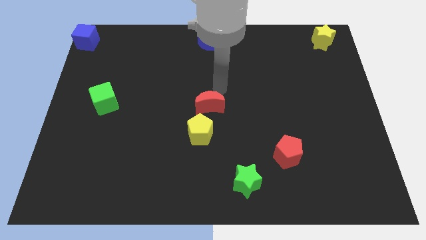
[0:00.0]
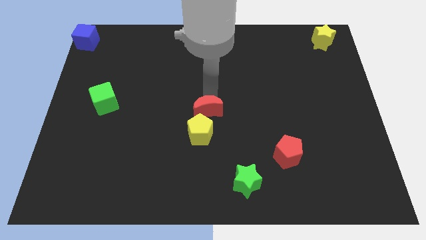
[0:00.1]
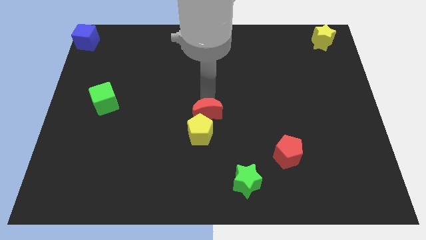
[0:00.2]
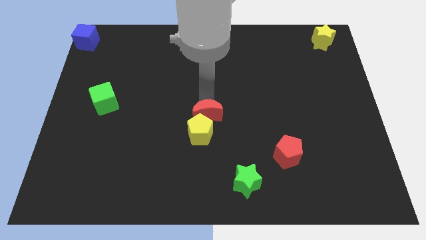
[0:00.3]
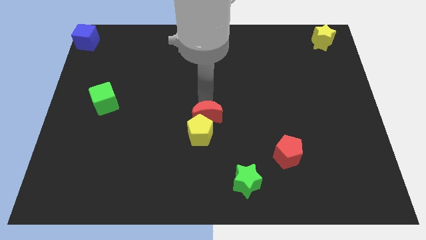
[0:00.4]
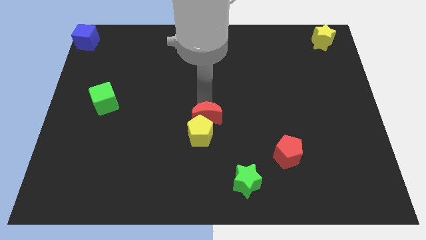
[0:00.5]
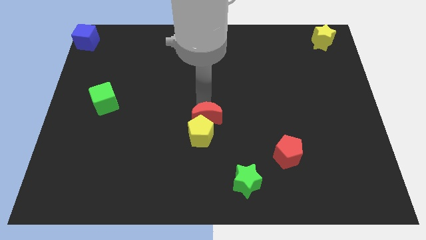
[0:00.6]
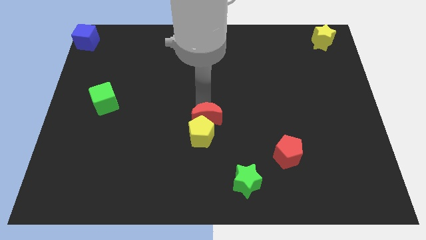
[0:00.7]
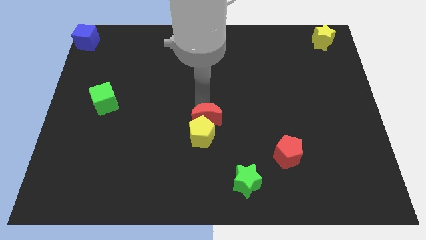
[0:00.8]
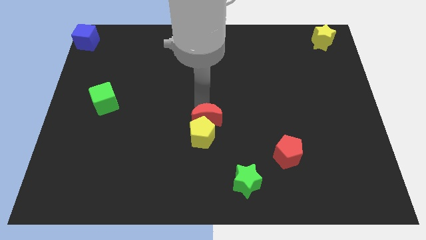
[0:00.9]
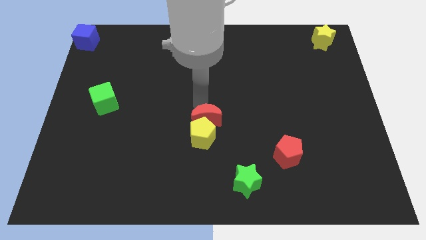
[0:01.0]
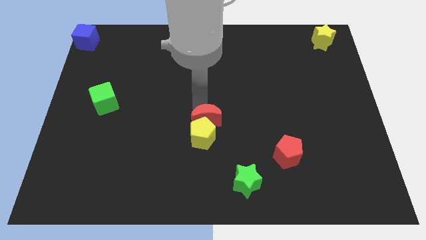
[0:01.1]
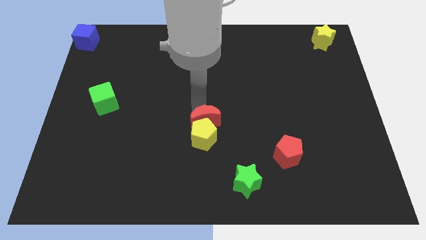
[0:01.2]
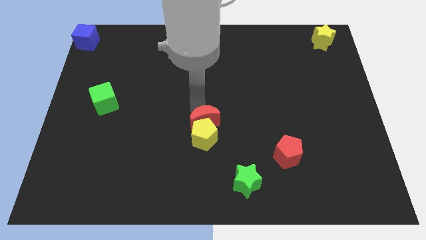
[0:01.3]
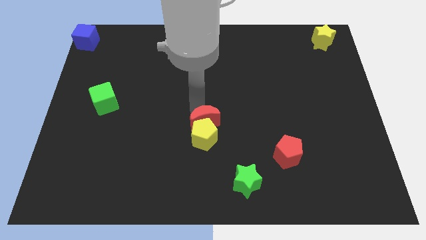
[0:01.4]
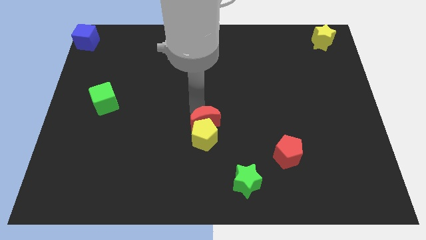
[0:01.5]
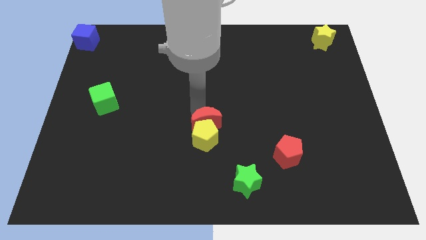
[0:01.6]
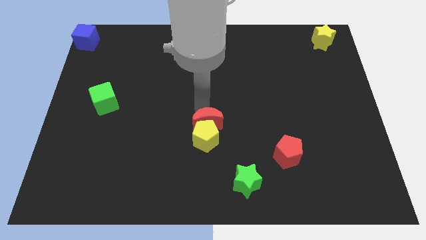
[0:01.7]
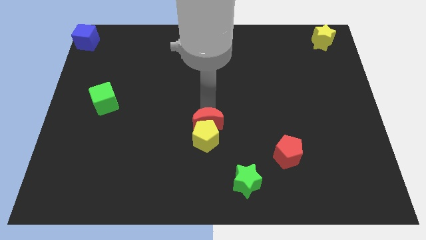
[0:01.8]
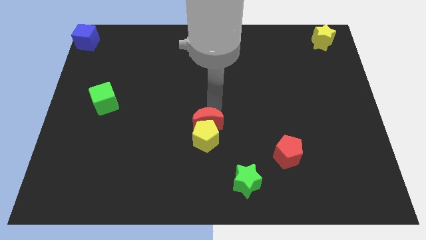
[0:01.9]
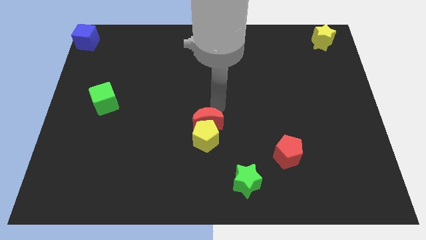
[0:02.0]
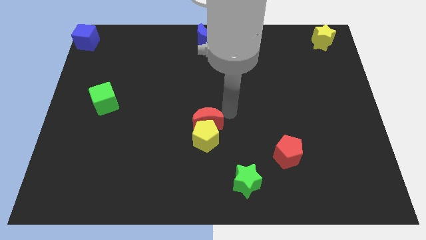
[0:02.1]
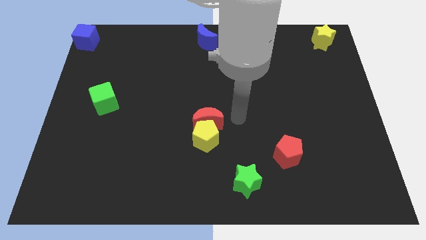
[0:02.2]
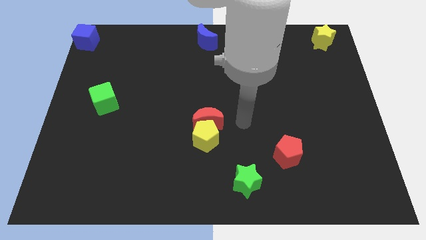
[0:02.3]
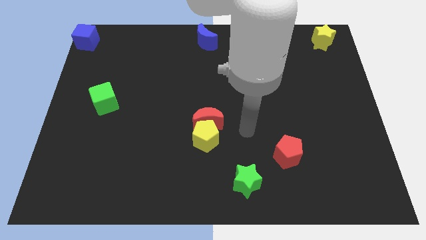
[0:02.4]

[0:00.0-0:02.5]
push the red moon into the yellow pentagon

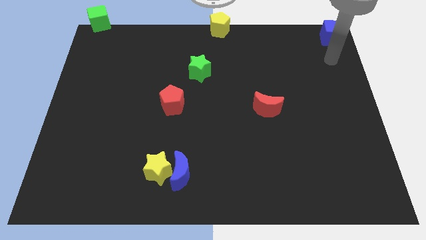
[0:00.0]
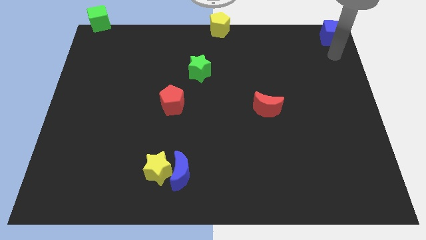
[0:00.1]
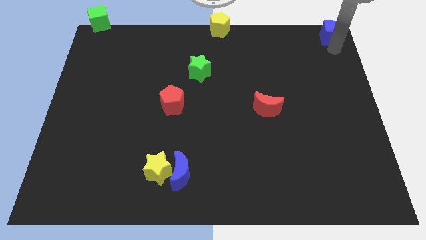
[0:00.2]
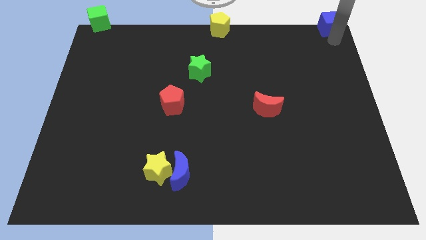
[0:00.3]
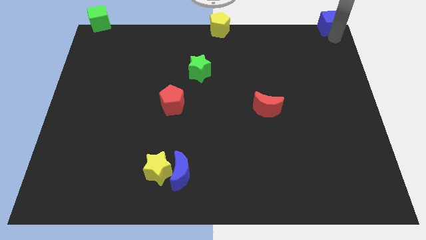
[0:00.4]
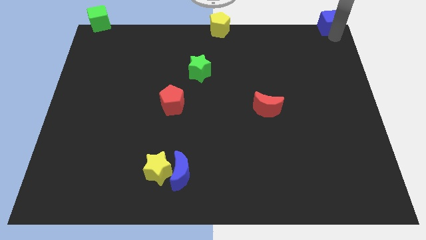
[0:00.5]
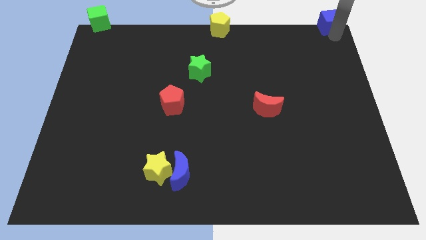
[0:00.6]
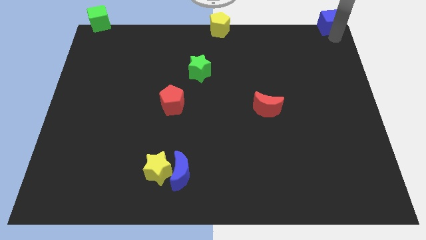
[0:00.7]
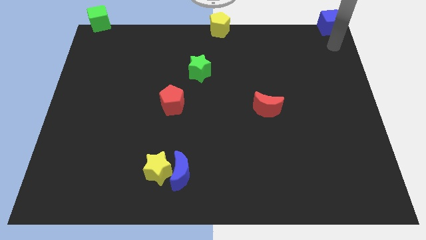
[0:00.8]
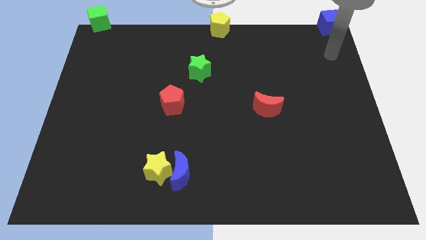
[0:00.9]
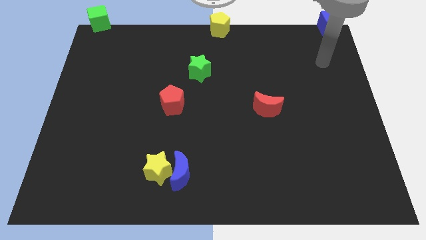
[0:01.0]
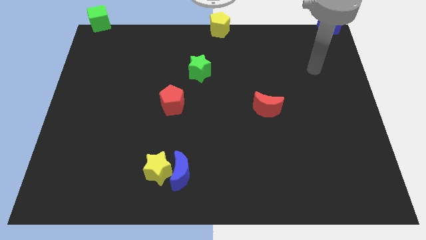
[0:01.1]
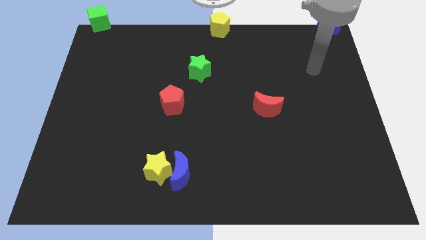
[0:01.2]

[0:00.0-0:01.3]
slightly push the blue cube to the top right corner

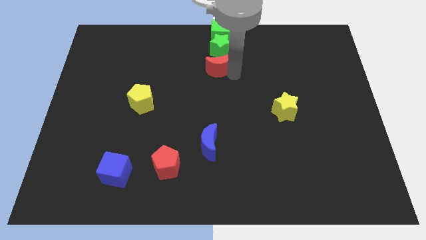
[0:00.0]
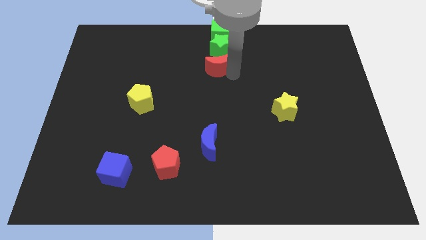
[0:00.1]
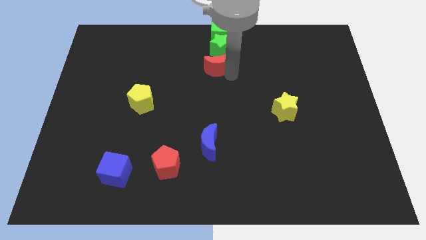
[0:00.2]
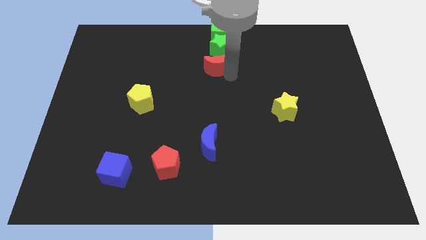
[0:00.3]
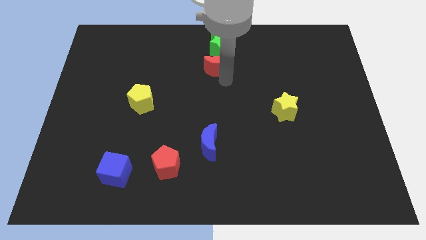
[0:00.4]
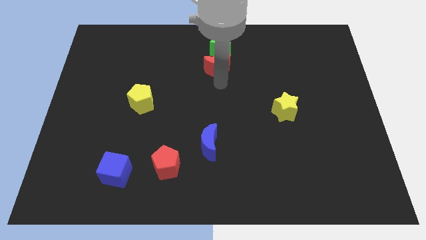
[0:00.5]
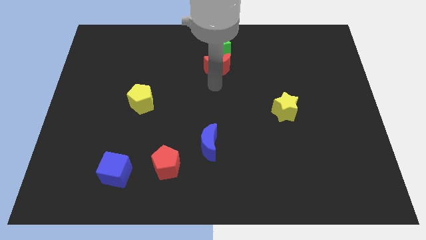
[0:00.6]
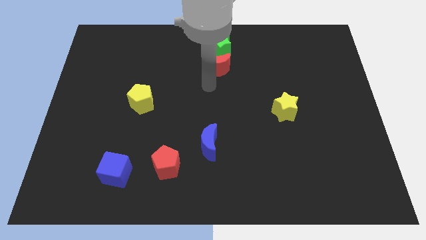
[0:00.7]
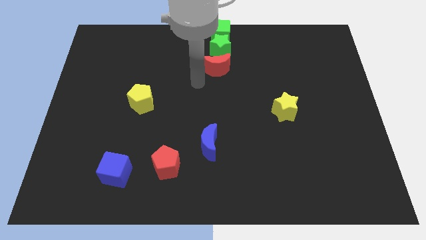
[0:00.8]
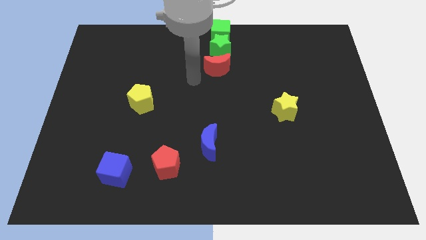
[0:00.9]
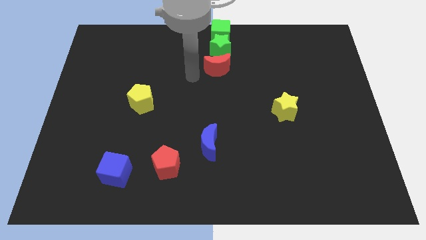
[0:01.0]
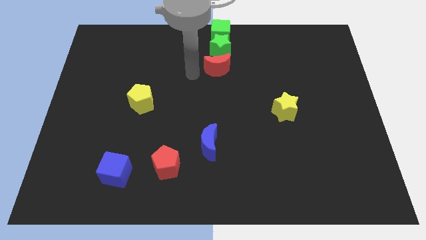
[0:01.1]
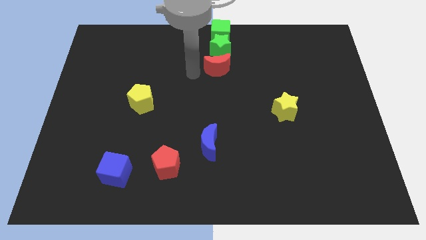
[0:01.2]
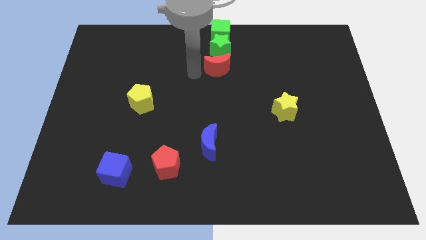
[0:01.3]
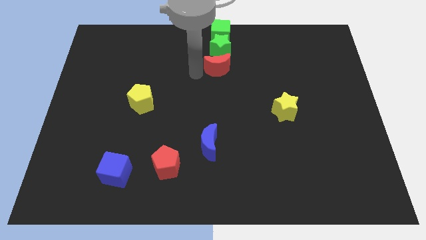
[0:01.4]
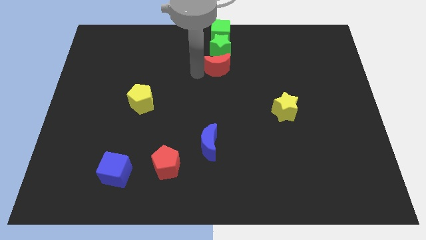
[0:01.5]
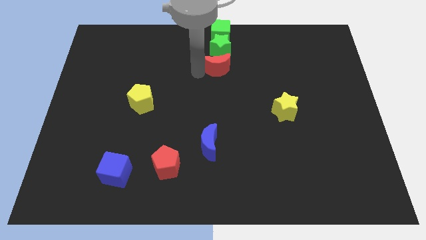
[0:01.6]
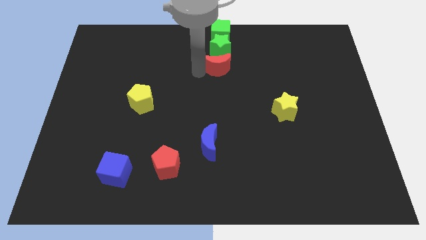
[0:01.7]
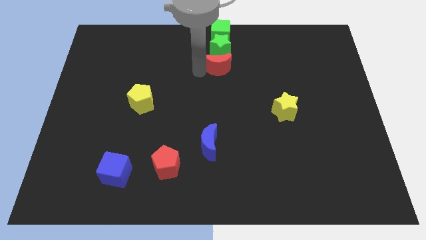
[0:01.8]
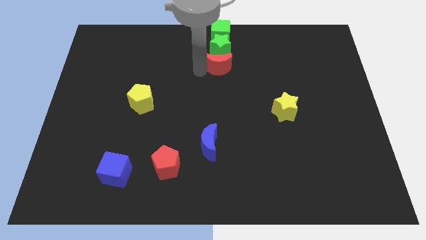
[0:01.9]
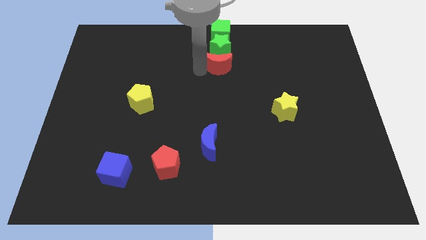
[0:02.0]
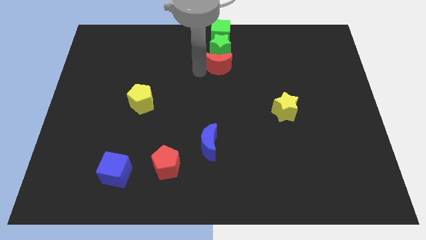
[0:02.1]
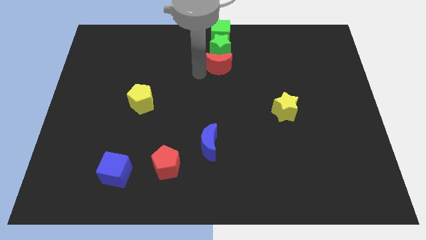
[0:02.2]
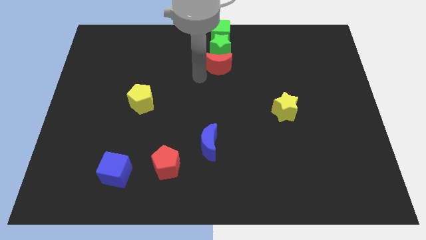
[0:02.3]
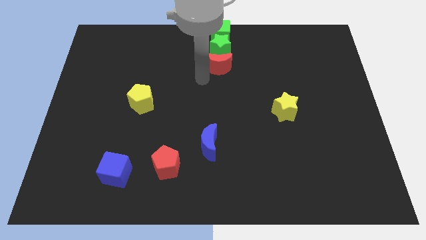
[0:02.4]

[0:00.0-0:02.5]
place the red moon below the green star

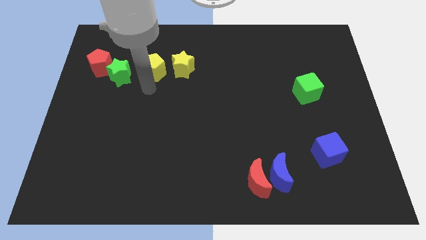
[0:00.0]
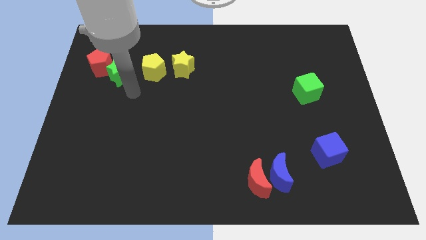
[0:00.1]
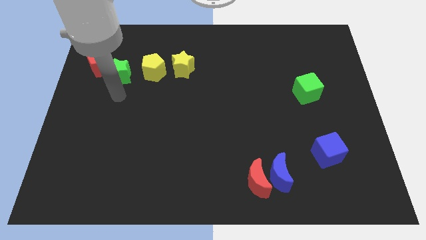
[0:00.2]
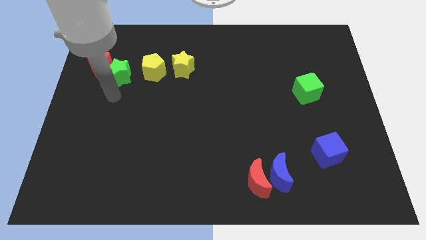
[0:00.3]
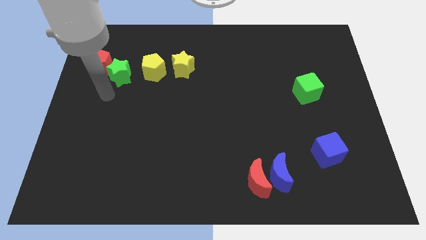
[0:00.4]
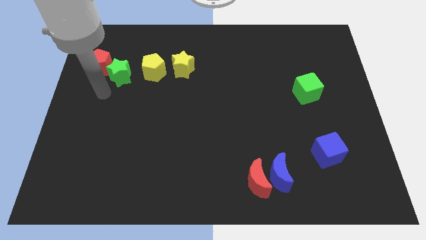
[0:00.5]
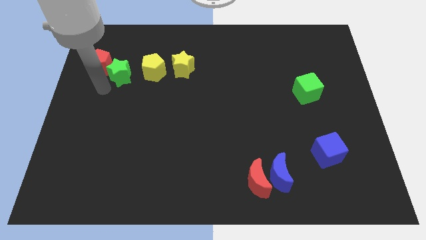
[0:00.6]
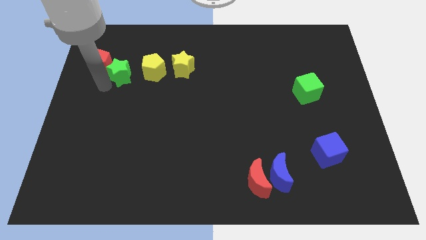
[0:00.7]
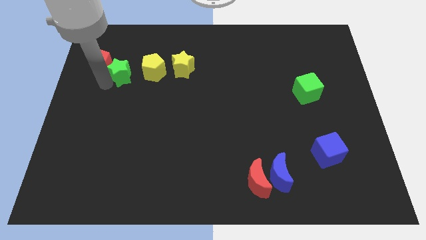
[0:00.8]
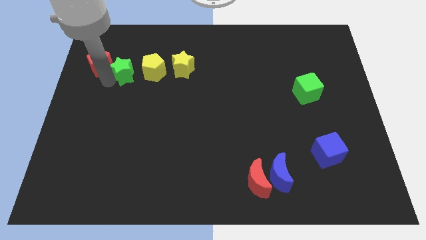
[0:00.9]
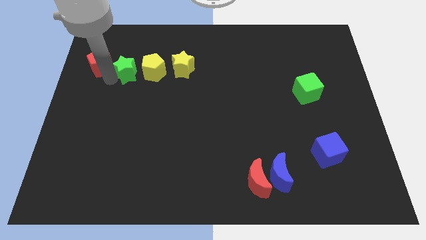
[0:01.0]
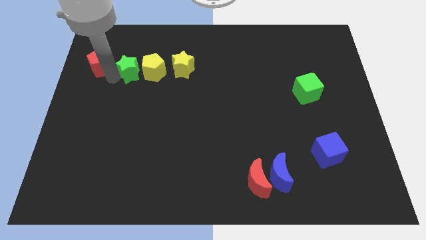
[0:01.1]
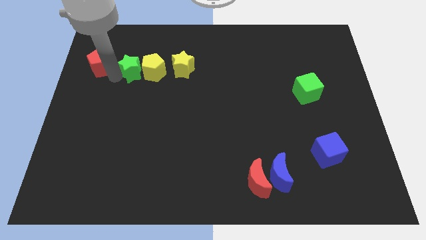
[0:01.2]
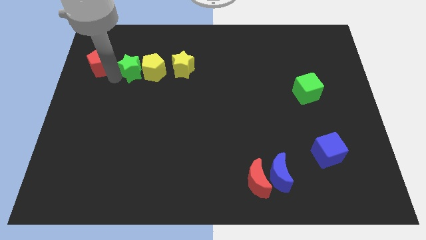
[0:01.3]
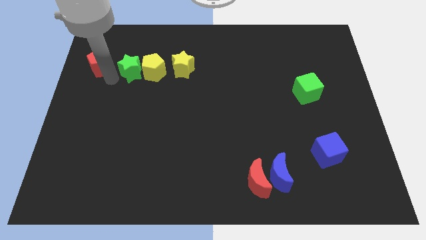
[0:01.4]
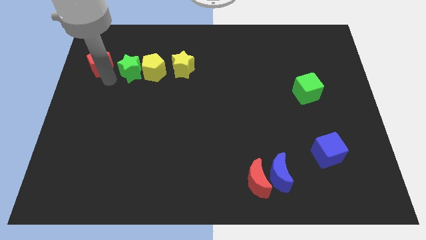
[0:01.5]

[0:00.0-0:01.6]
move the green star towards the yellow pentagon

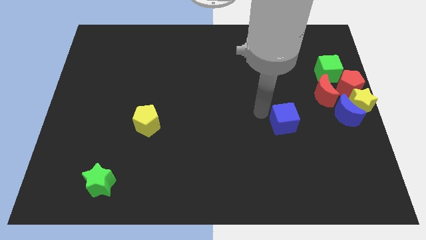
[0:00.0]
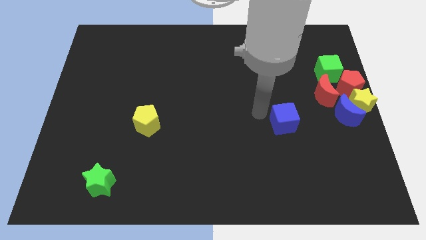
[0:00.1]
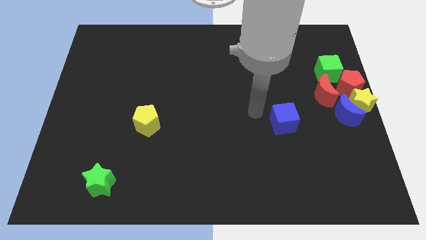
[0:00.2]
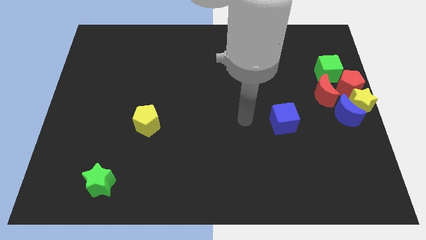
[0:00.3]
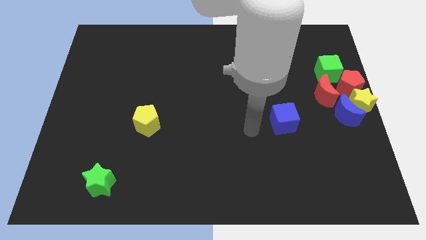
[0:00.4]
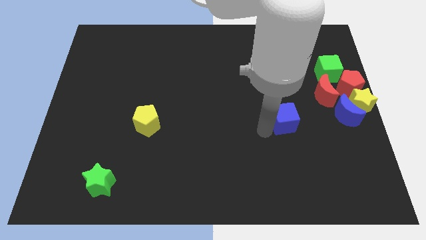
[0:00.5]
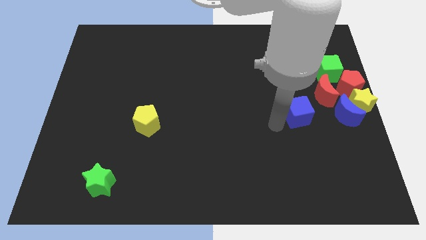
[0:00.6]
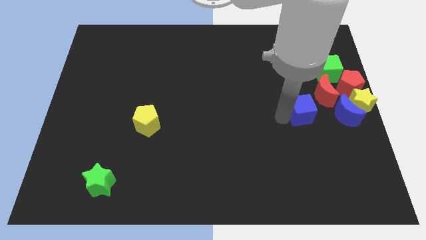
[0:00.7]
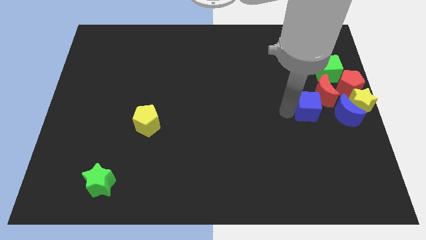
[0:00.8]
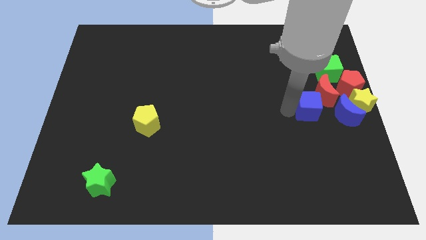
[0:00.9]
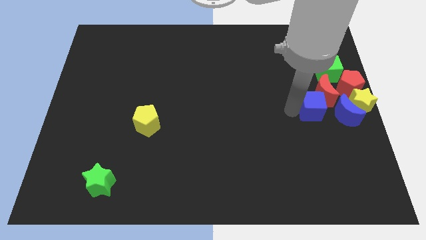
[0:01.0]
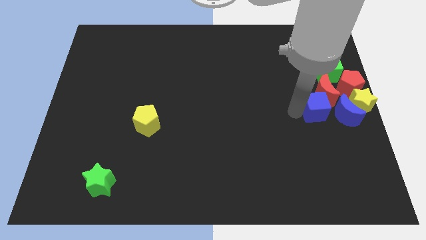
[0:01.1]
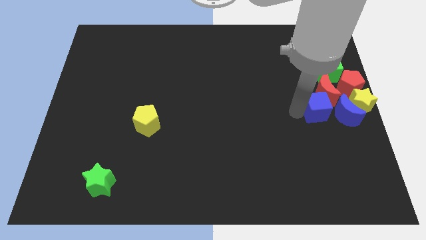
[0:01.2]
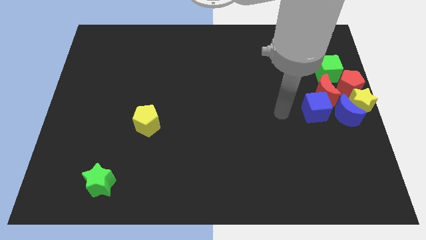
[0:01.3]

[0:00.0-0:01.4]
move blue cube left beside the blue moon
